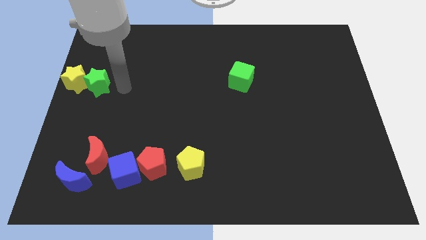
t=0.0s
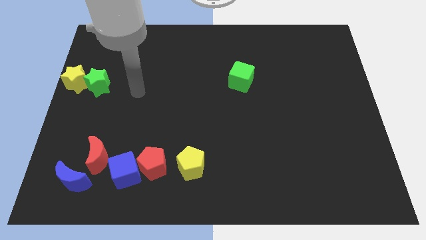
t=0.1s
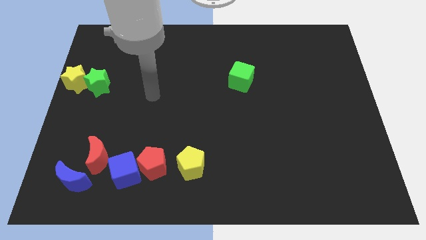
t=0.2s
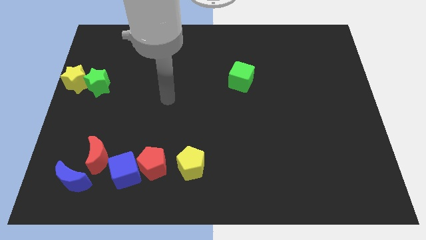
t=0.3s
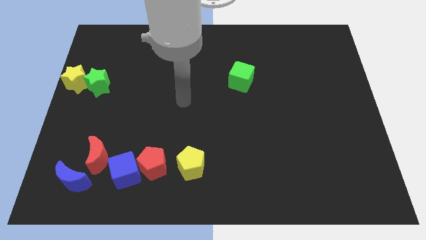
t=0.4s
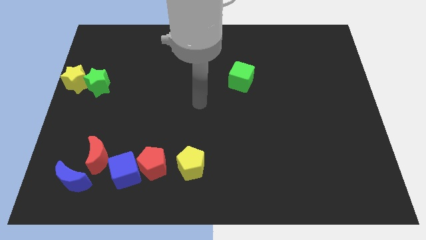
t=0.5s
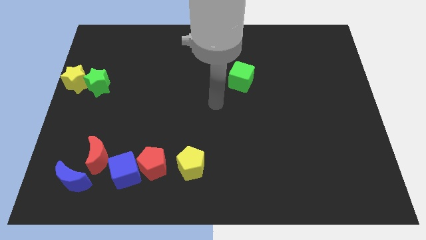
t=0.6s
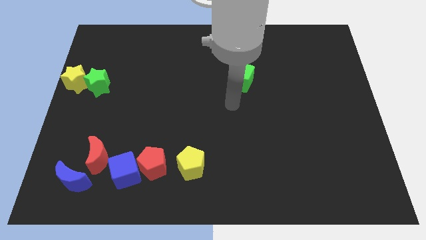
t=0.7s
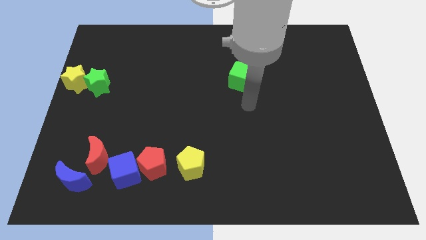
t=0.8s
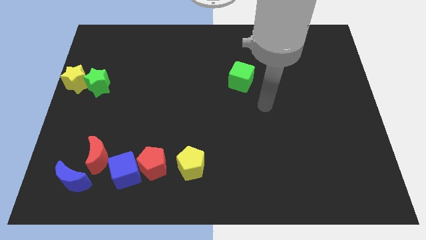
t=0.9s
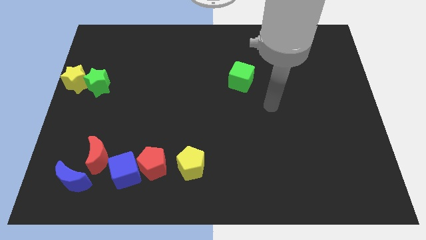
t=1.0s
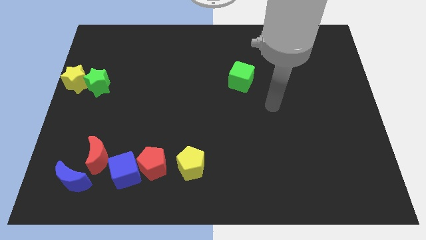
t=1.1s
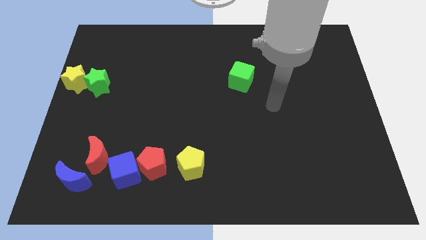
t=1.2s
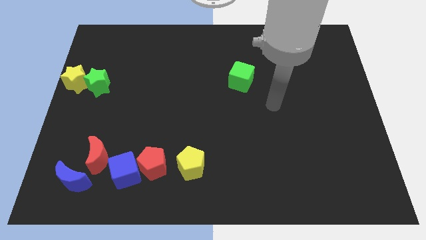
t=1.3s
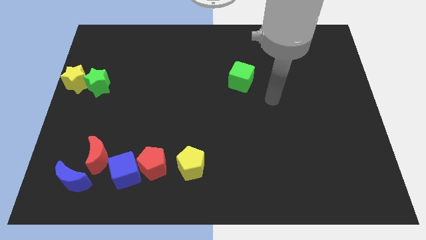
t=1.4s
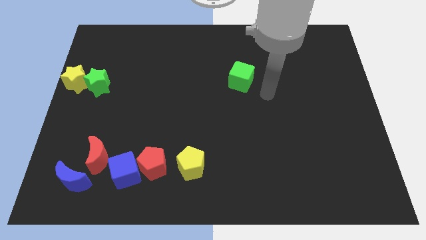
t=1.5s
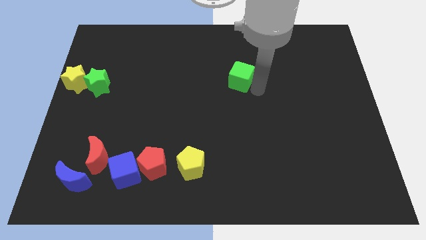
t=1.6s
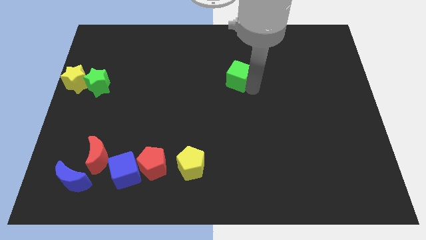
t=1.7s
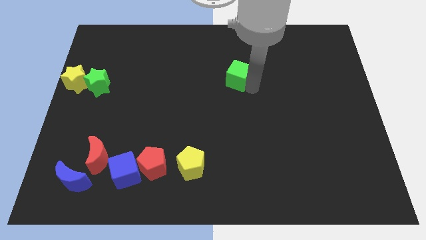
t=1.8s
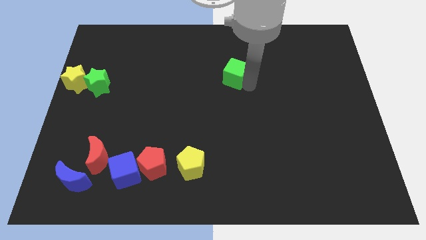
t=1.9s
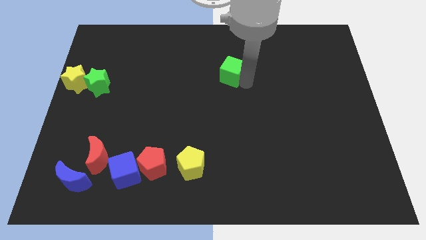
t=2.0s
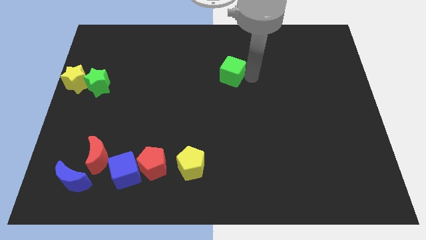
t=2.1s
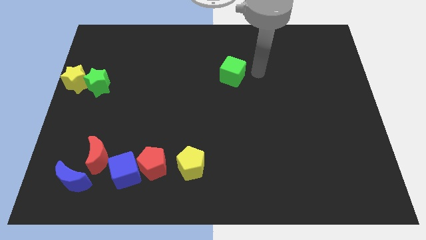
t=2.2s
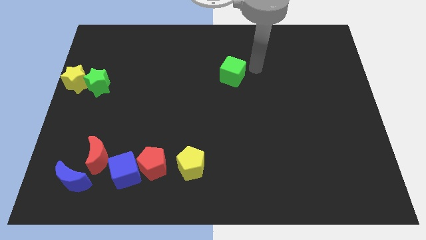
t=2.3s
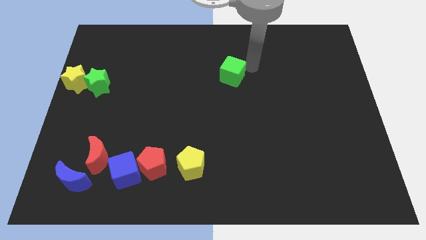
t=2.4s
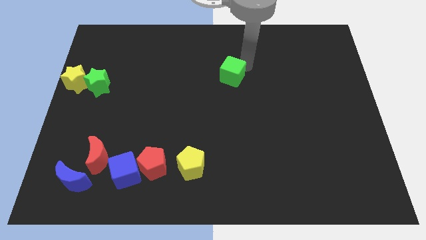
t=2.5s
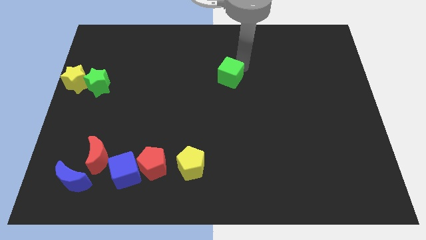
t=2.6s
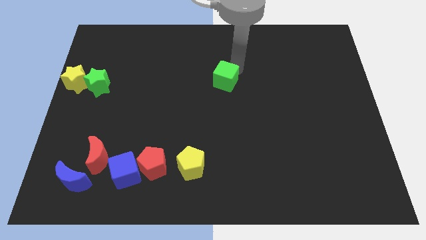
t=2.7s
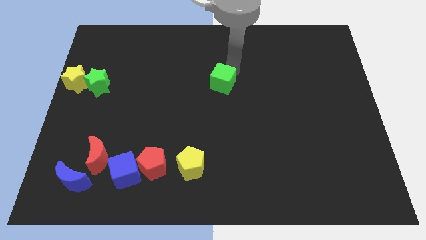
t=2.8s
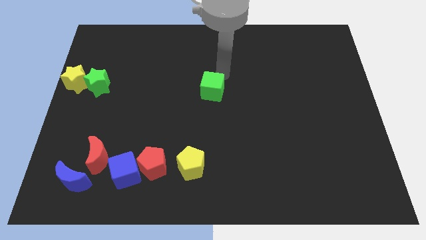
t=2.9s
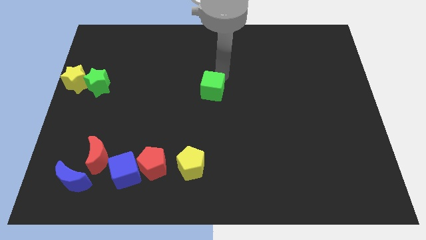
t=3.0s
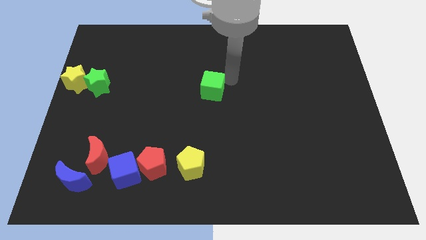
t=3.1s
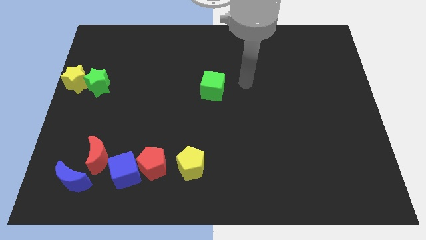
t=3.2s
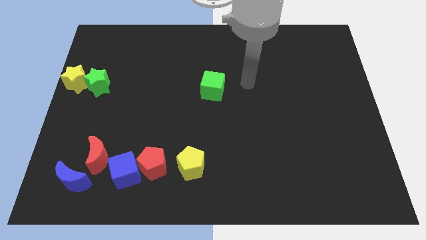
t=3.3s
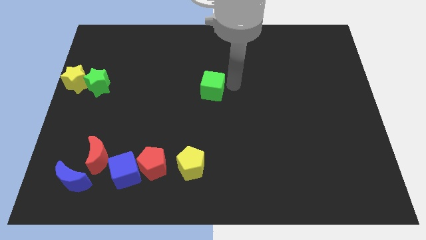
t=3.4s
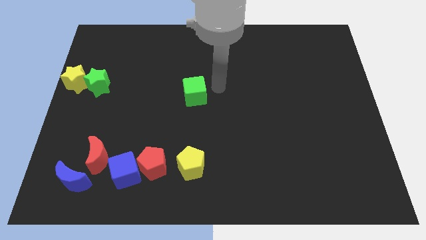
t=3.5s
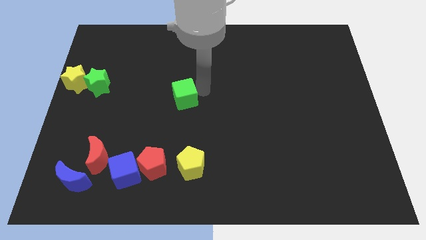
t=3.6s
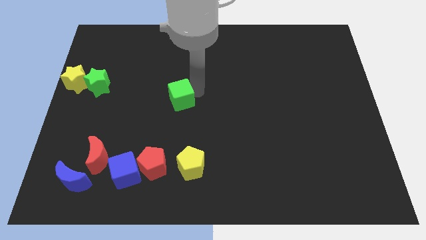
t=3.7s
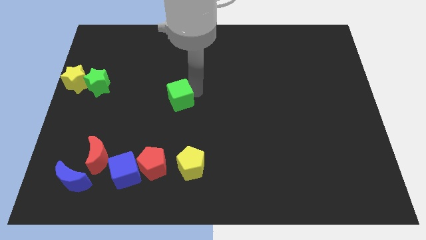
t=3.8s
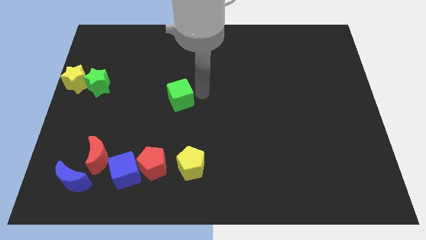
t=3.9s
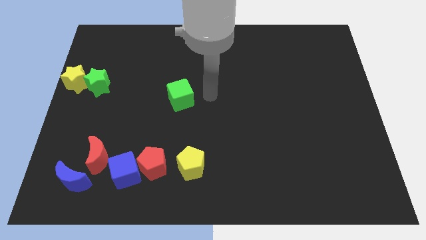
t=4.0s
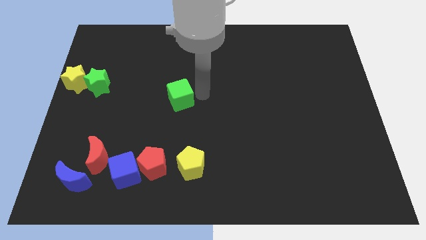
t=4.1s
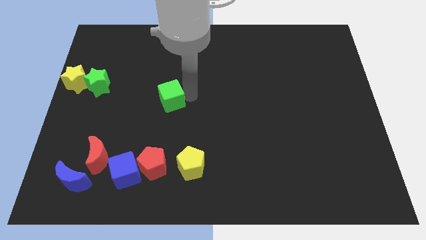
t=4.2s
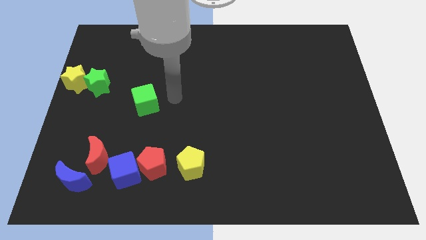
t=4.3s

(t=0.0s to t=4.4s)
place the green cube above the red pentagon

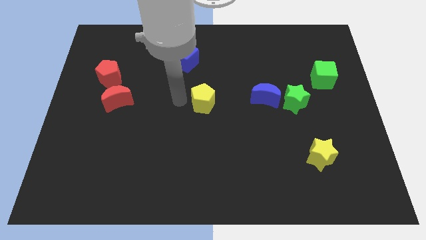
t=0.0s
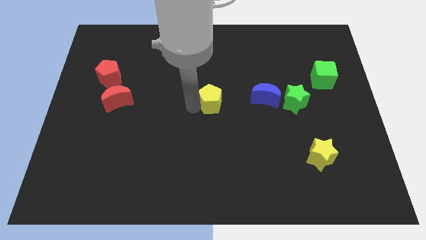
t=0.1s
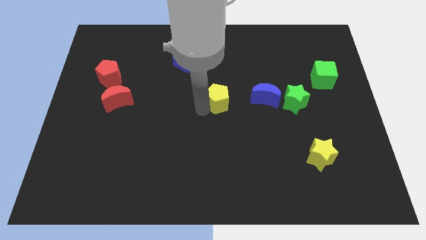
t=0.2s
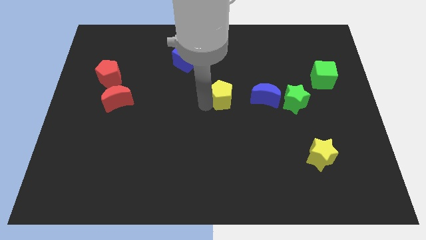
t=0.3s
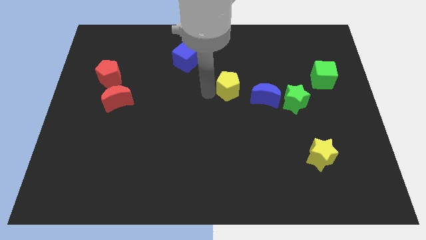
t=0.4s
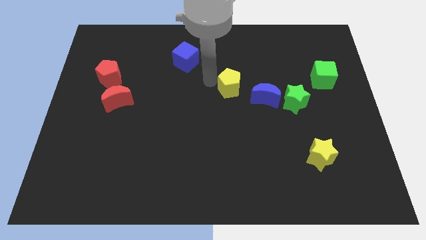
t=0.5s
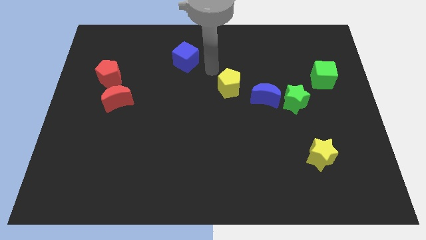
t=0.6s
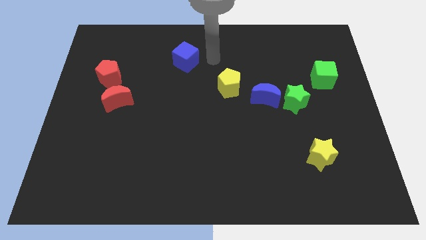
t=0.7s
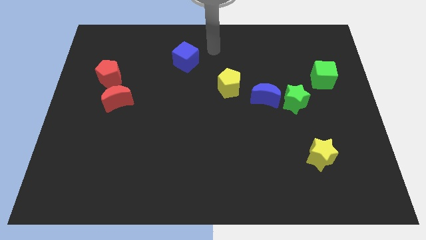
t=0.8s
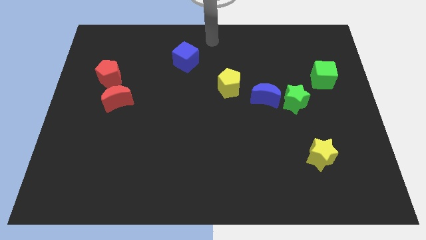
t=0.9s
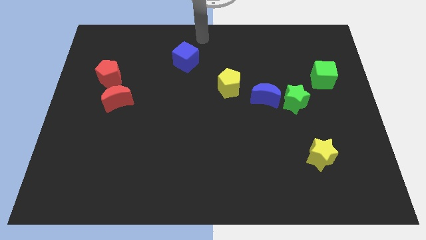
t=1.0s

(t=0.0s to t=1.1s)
push yellow pentagon towards the blue moon

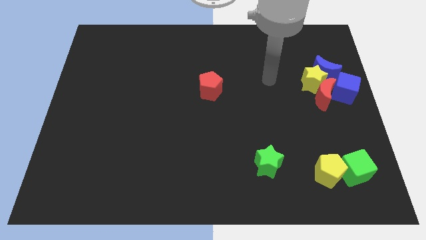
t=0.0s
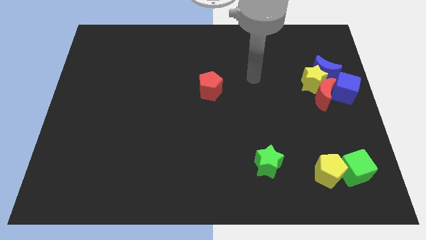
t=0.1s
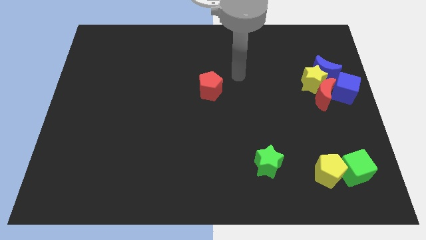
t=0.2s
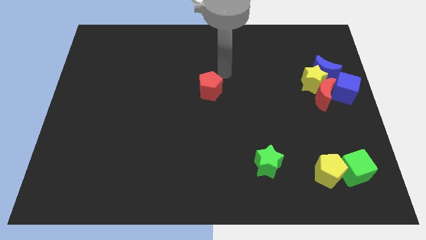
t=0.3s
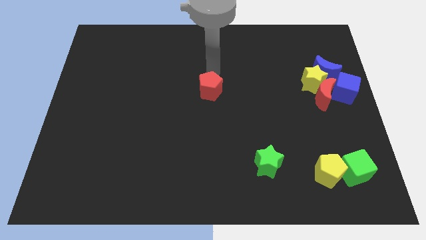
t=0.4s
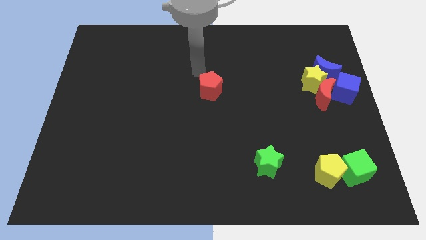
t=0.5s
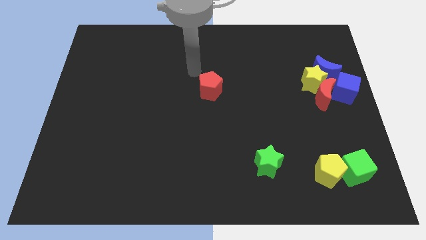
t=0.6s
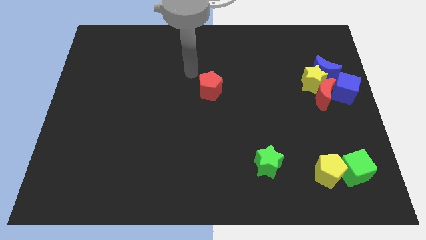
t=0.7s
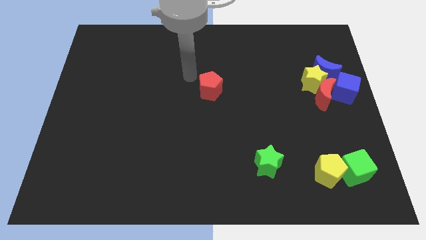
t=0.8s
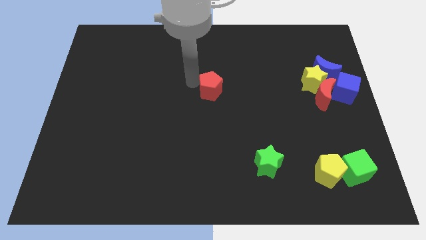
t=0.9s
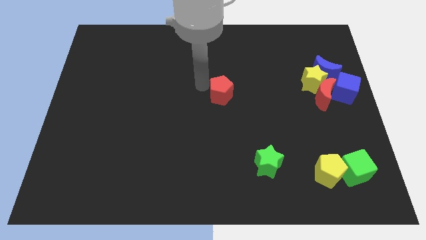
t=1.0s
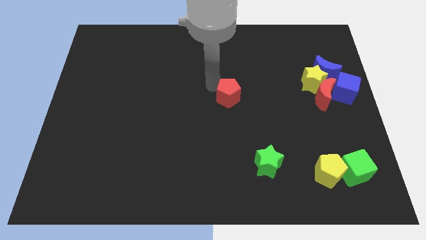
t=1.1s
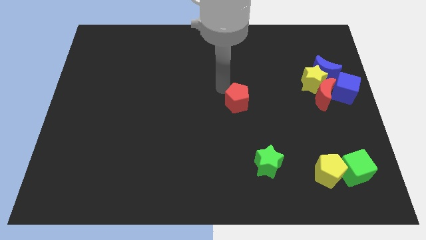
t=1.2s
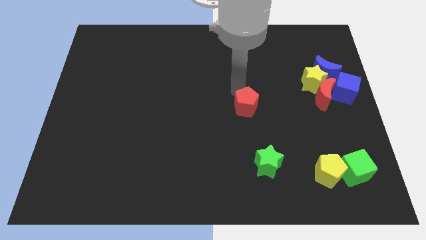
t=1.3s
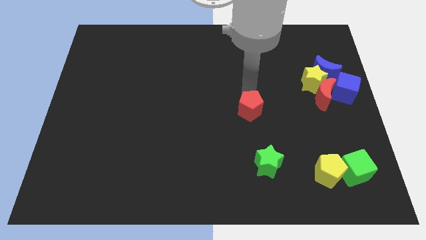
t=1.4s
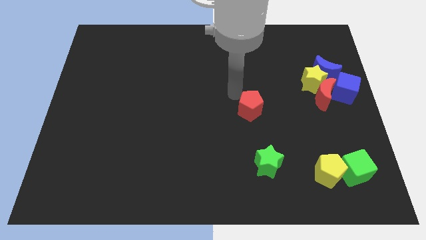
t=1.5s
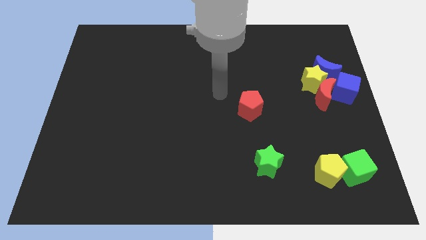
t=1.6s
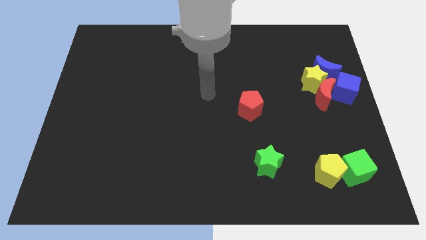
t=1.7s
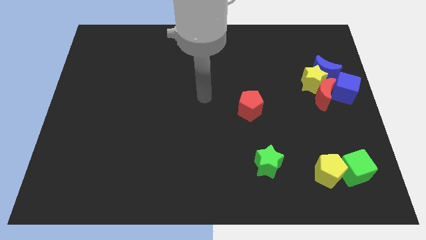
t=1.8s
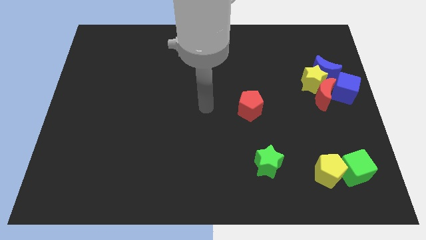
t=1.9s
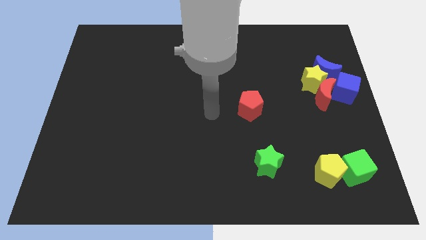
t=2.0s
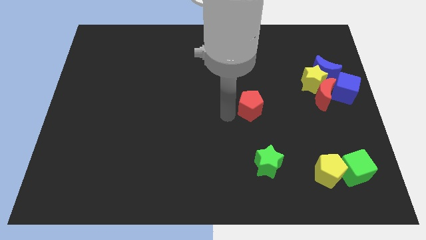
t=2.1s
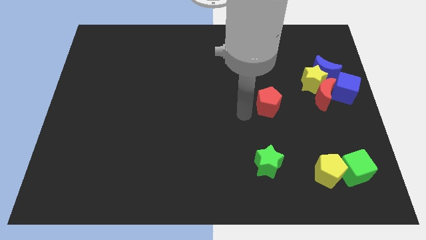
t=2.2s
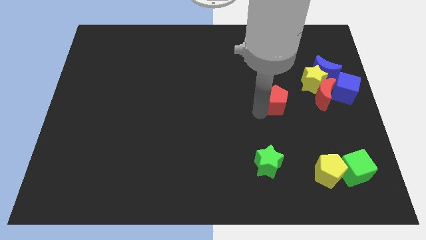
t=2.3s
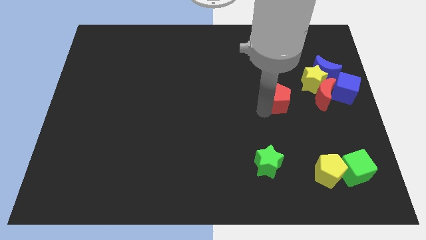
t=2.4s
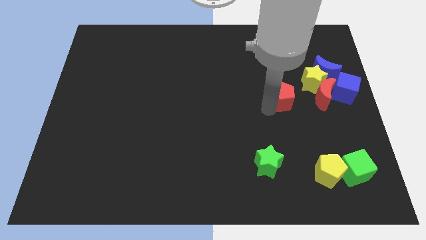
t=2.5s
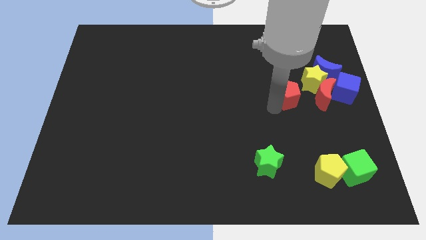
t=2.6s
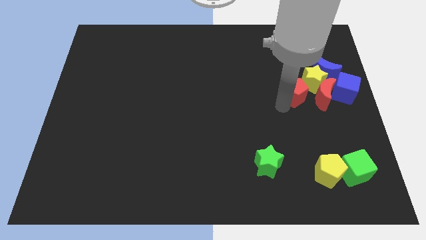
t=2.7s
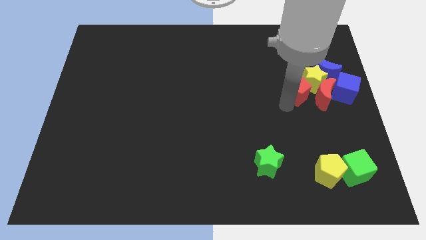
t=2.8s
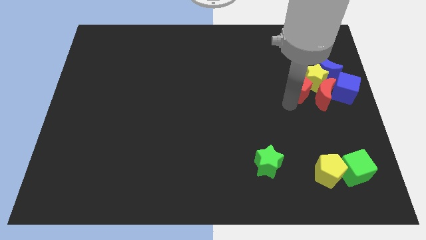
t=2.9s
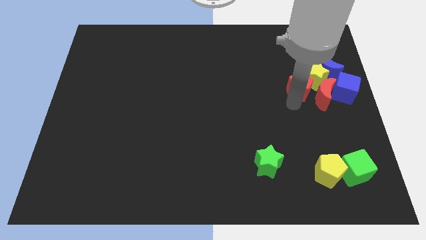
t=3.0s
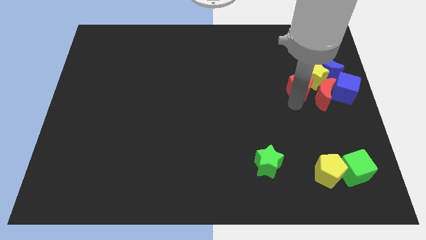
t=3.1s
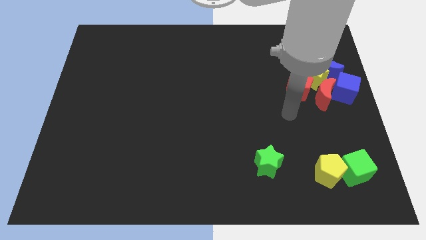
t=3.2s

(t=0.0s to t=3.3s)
push the red pentagon into yellow star

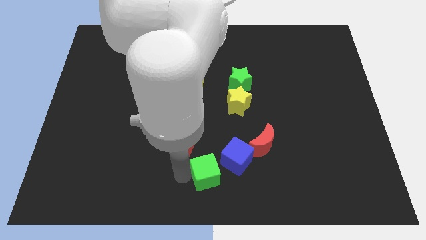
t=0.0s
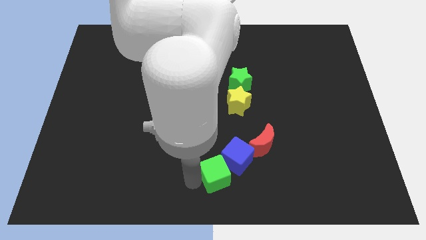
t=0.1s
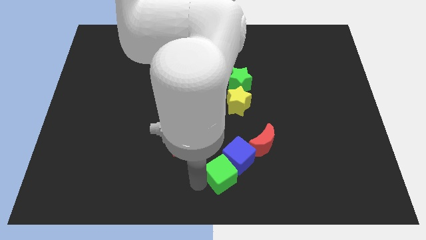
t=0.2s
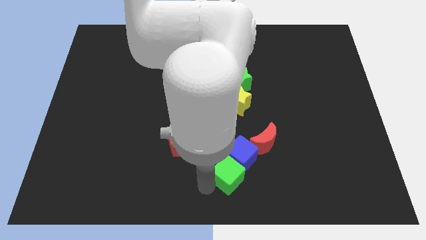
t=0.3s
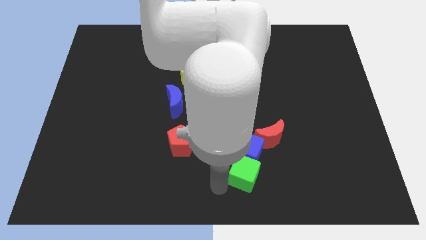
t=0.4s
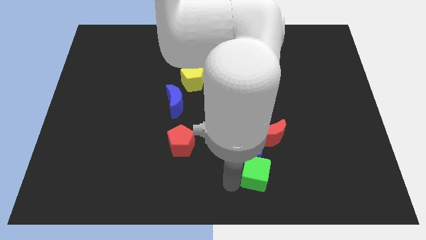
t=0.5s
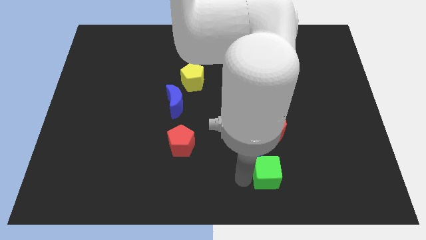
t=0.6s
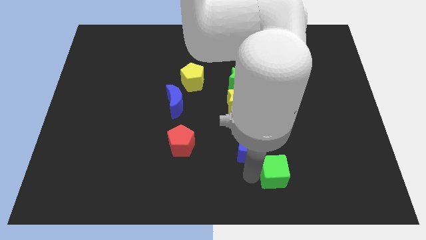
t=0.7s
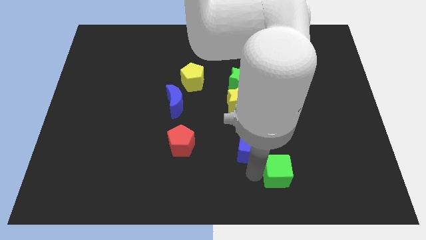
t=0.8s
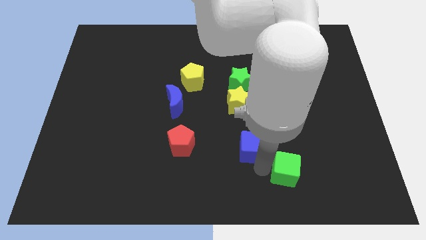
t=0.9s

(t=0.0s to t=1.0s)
move the green cube to the bottom of the red crescent
